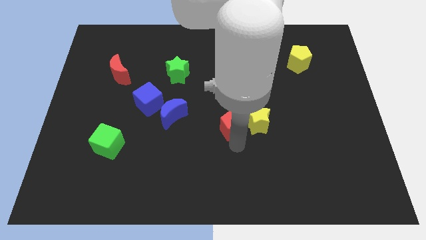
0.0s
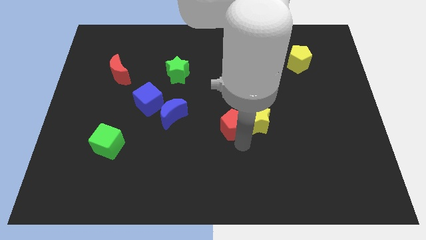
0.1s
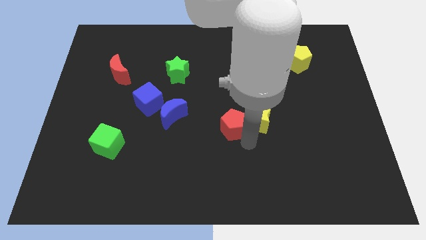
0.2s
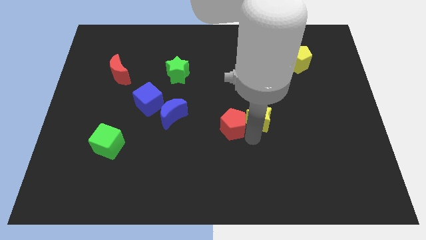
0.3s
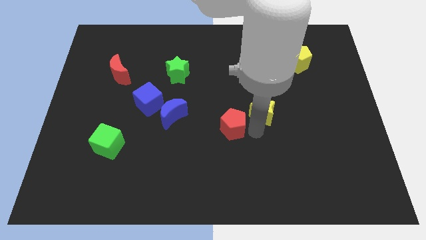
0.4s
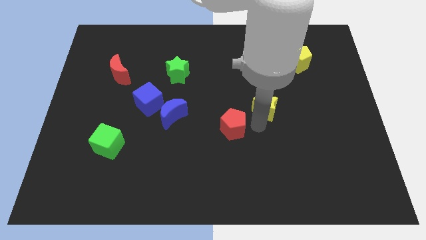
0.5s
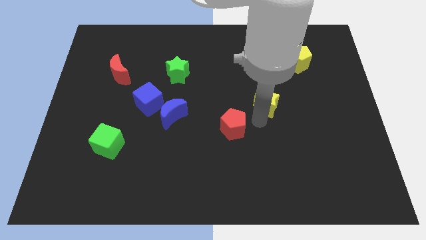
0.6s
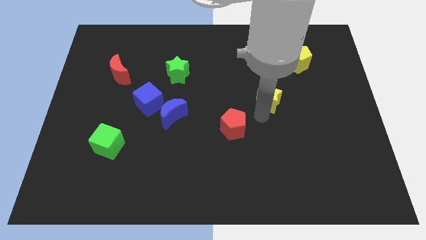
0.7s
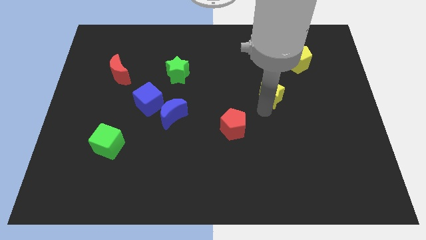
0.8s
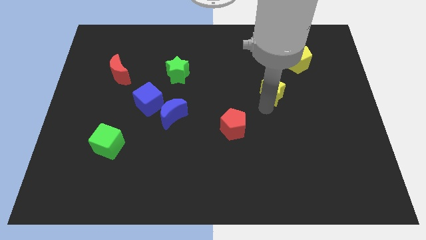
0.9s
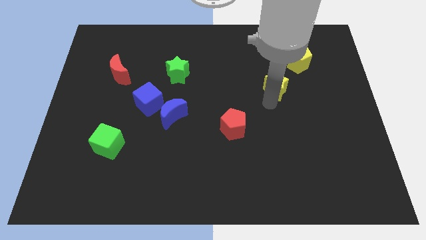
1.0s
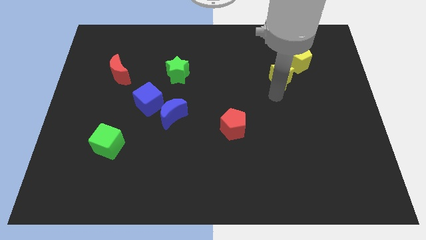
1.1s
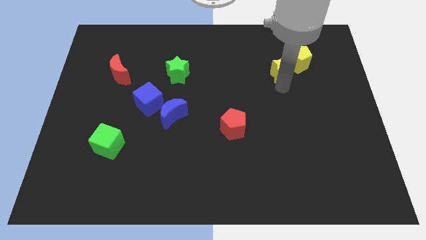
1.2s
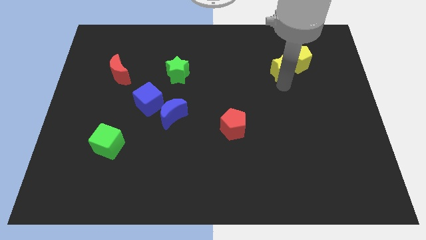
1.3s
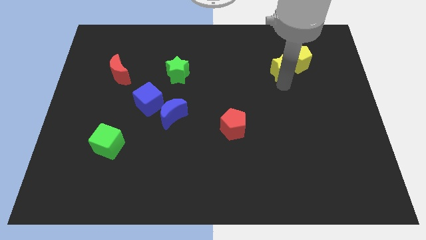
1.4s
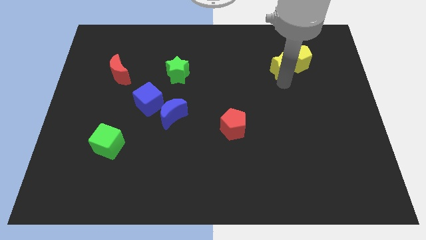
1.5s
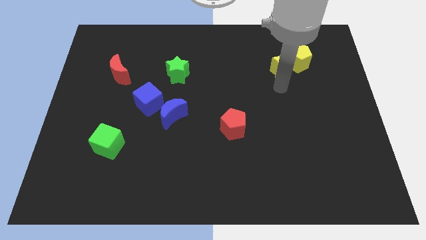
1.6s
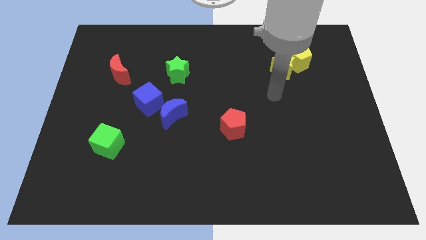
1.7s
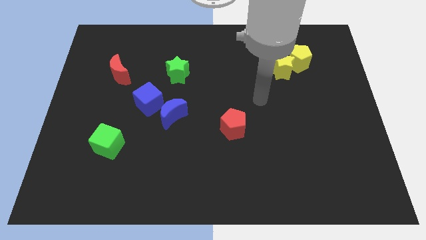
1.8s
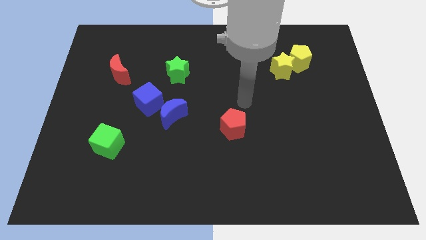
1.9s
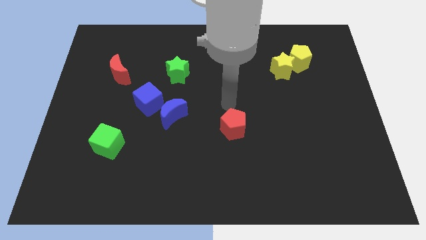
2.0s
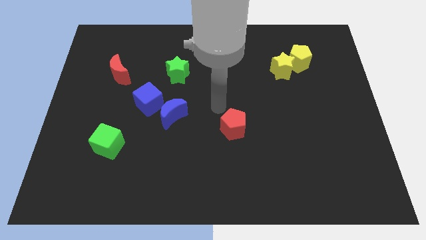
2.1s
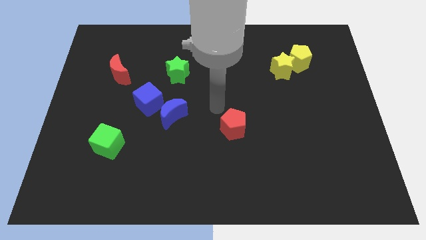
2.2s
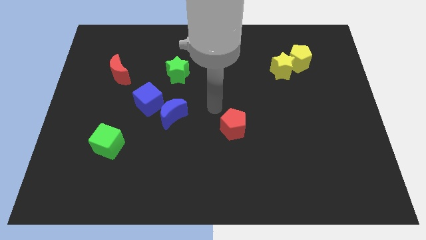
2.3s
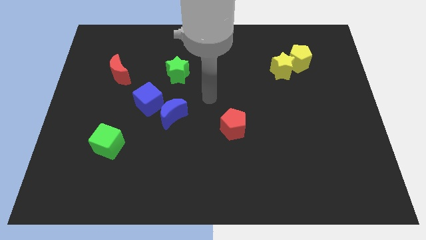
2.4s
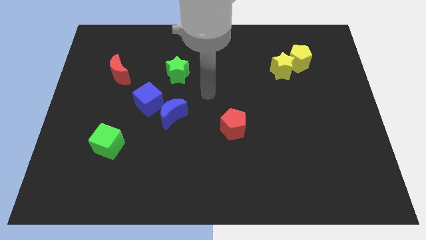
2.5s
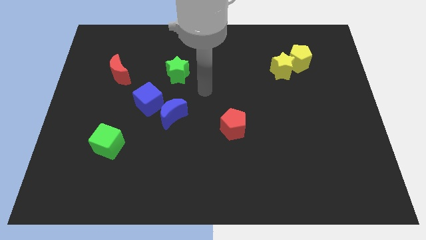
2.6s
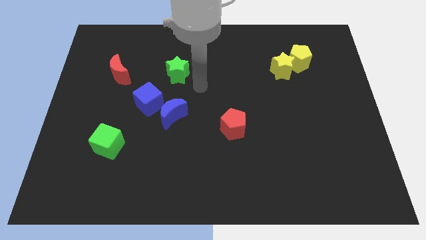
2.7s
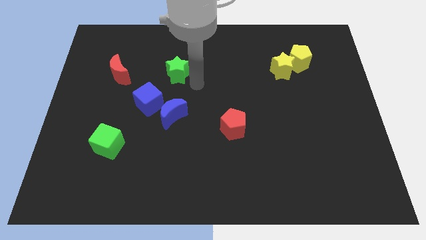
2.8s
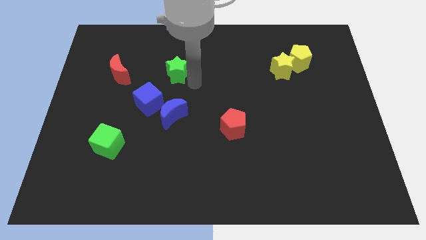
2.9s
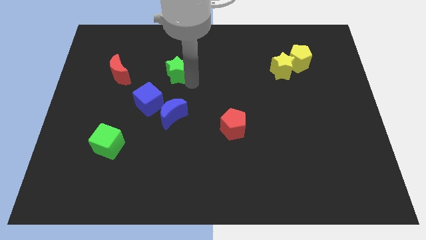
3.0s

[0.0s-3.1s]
push the yellow star at the left side of the yellow pentagon

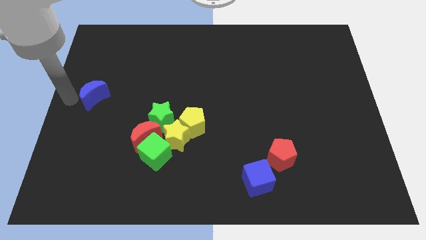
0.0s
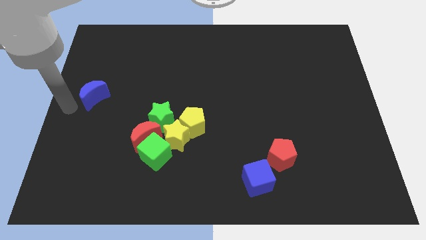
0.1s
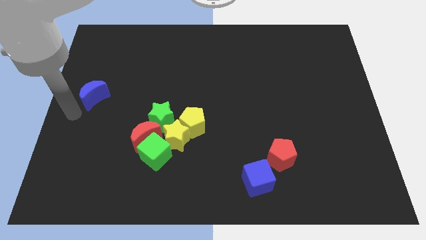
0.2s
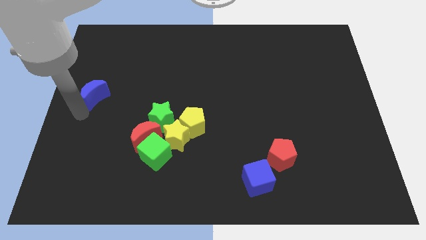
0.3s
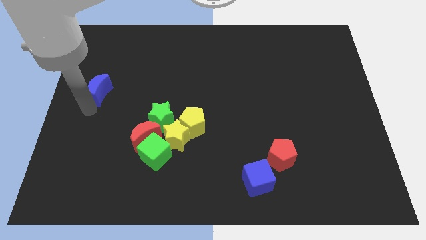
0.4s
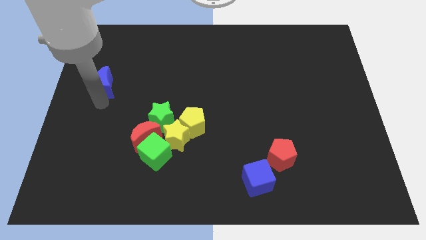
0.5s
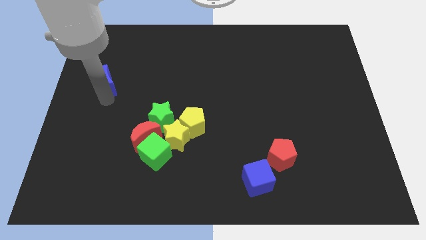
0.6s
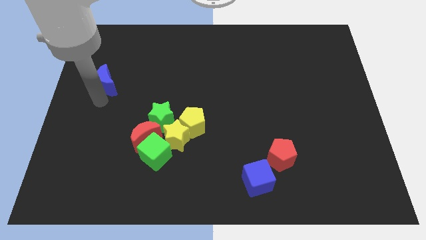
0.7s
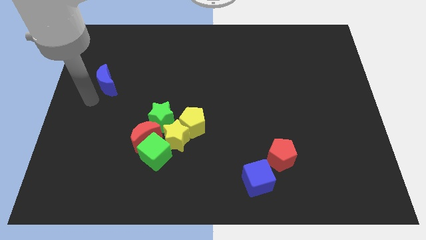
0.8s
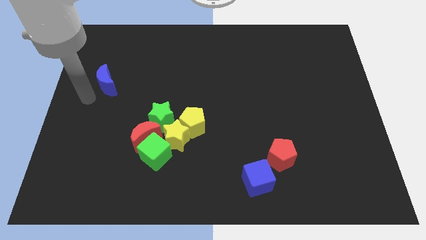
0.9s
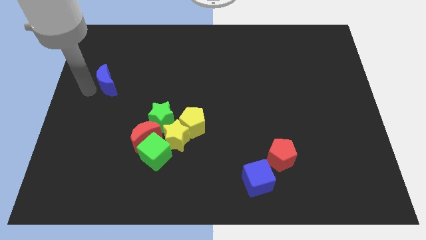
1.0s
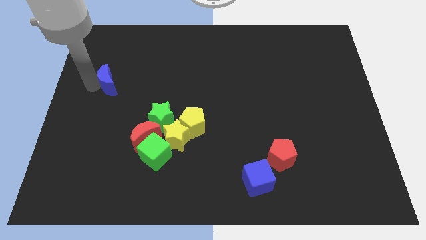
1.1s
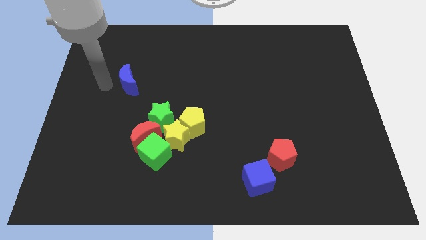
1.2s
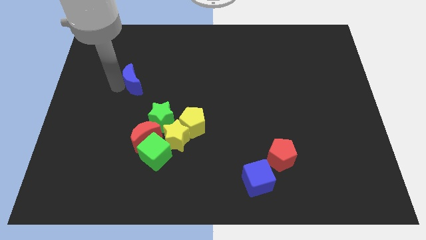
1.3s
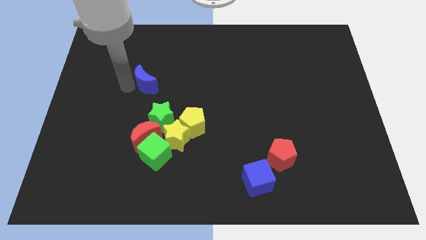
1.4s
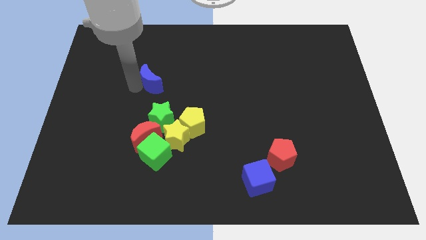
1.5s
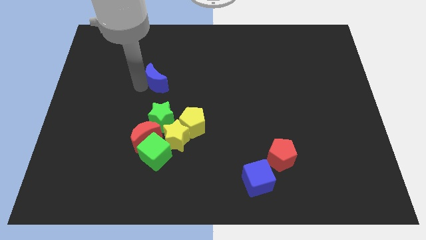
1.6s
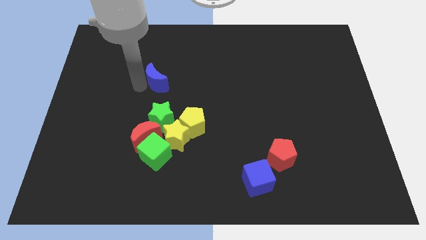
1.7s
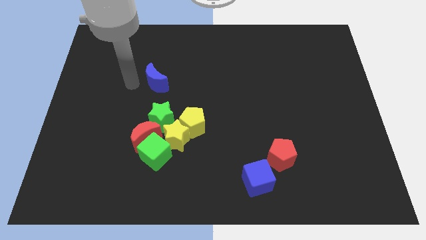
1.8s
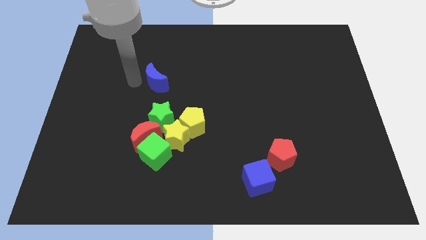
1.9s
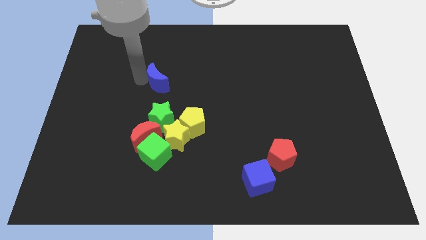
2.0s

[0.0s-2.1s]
move the blue moon above the green star

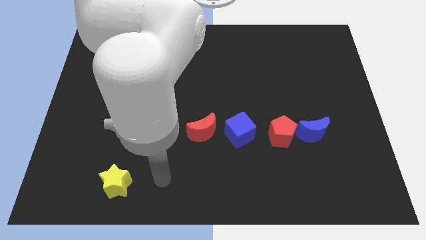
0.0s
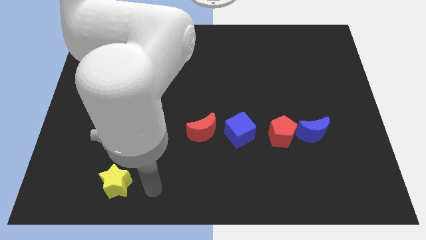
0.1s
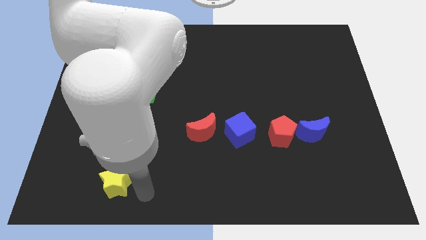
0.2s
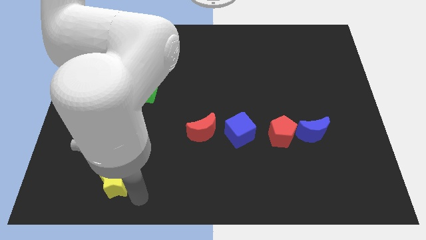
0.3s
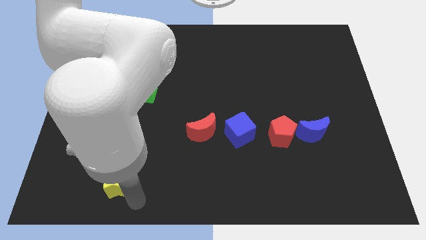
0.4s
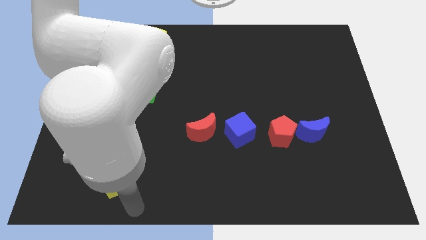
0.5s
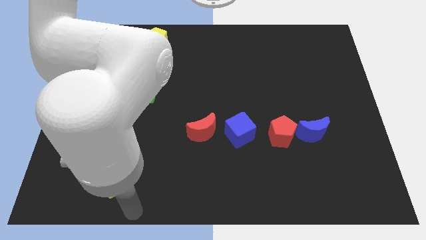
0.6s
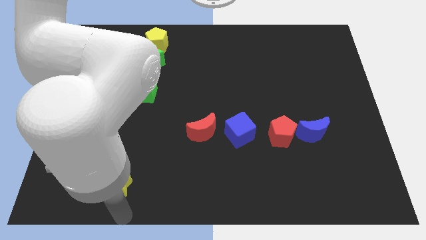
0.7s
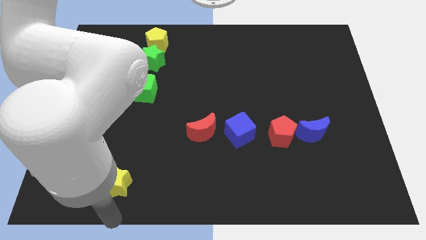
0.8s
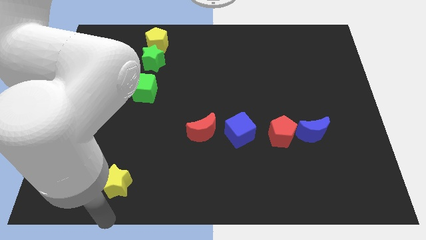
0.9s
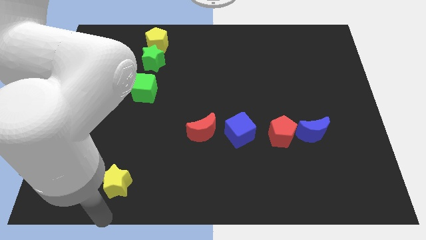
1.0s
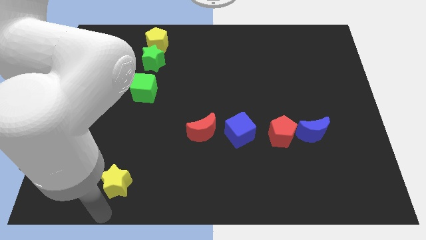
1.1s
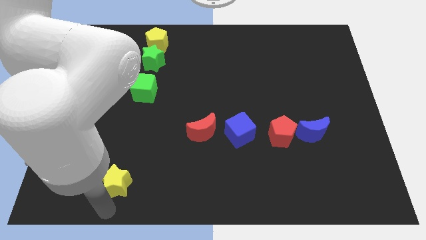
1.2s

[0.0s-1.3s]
point the arm below the yellow star

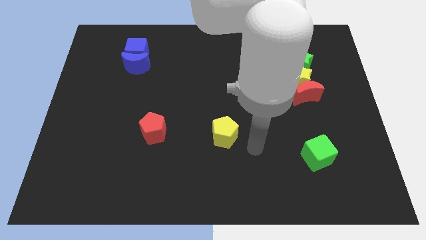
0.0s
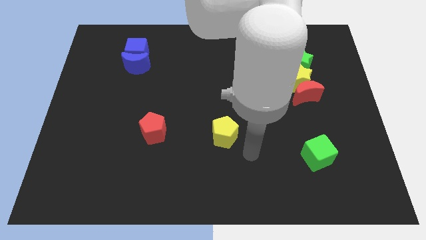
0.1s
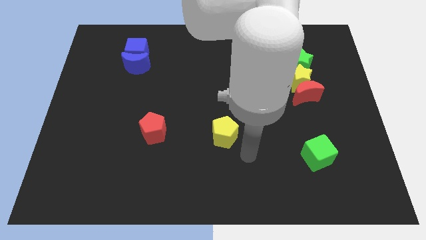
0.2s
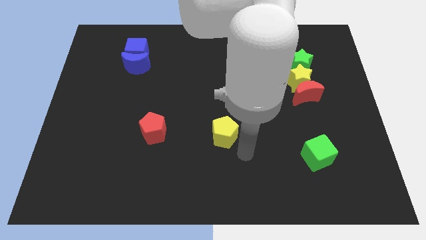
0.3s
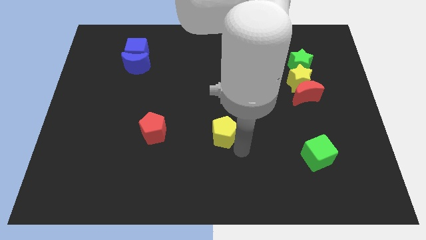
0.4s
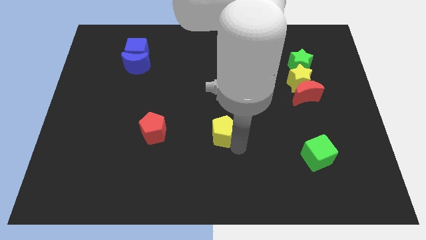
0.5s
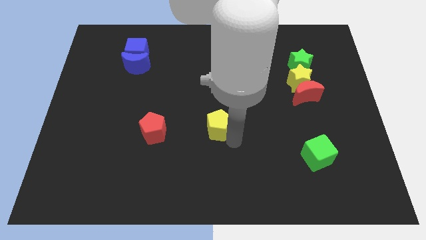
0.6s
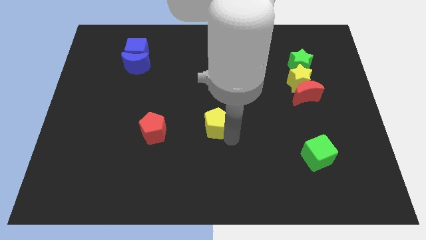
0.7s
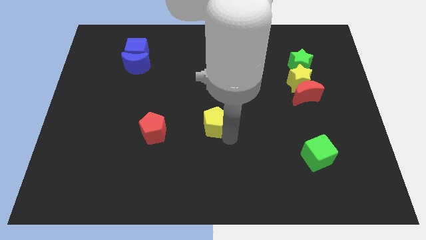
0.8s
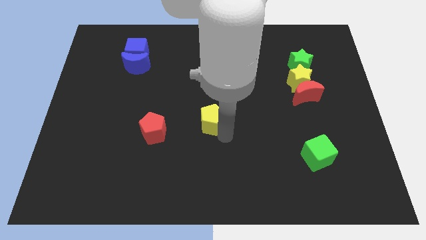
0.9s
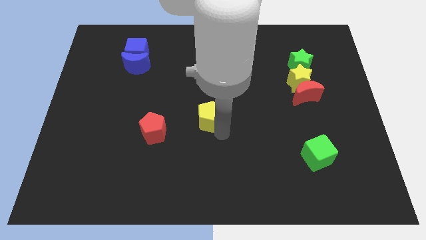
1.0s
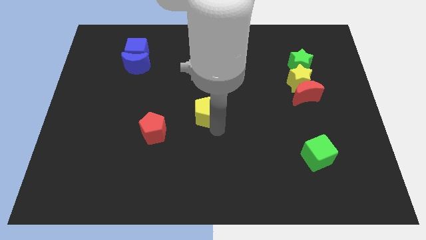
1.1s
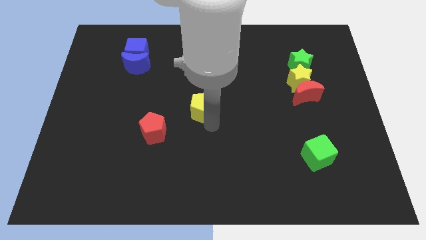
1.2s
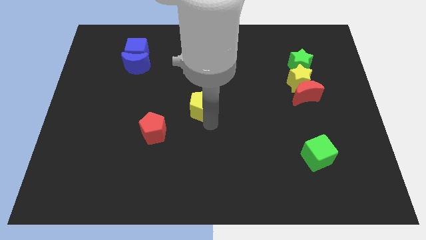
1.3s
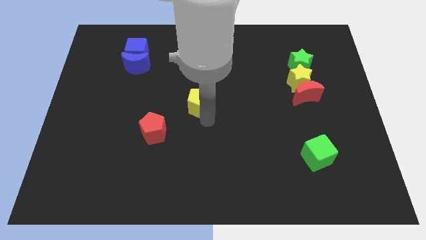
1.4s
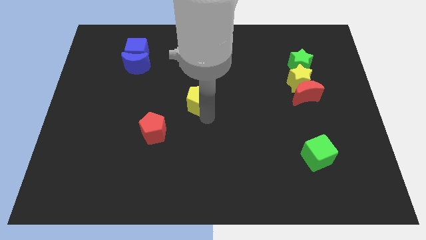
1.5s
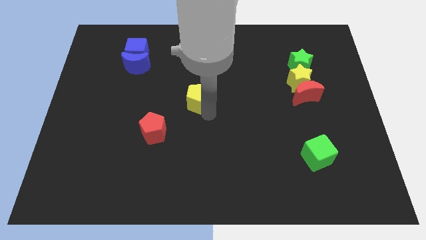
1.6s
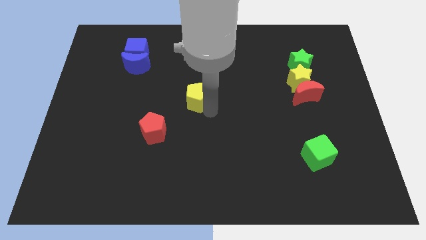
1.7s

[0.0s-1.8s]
move the yellow pentagon to the top right of the red pentagon

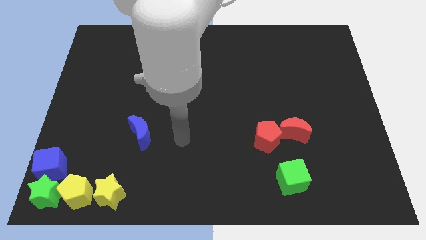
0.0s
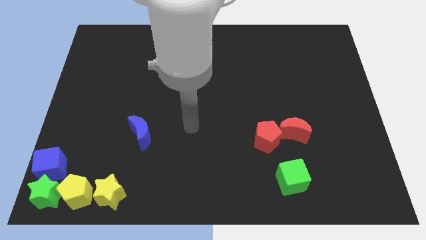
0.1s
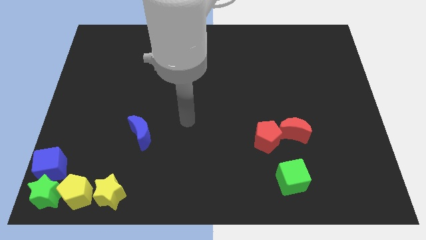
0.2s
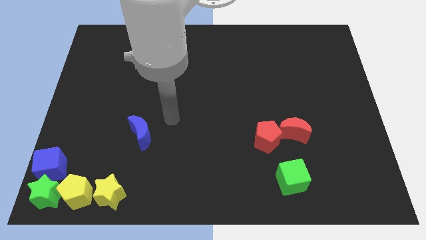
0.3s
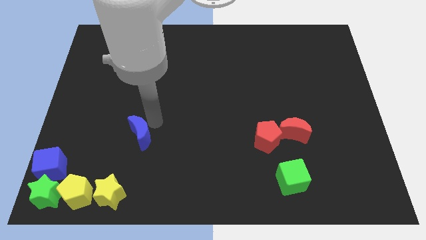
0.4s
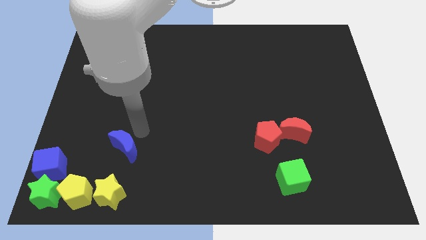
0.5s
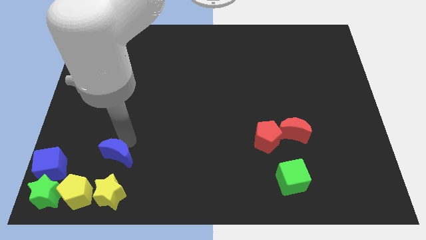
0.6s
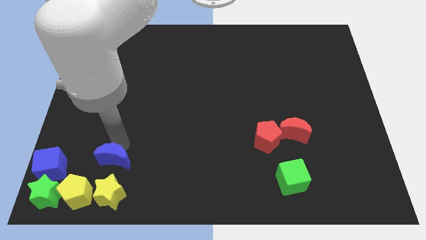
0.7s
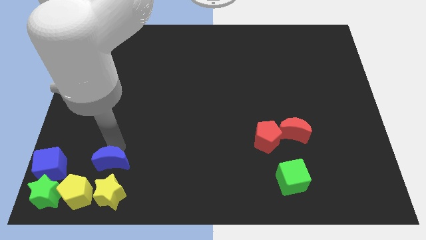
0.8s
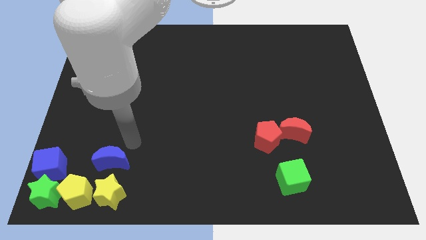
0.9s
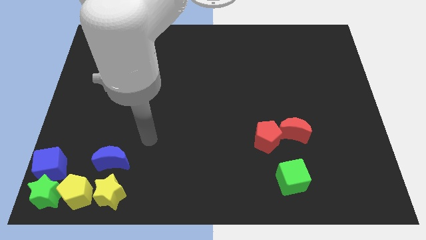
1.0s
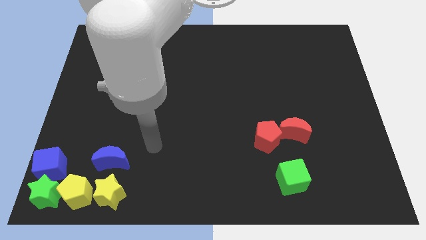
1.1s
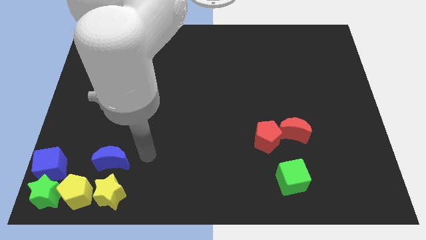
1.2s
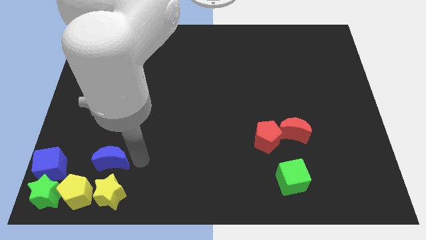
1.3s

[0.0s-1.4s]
place the blue crescent above the yellow star
